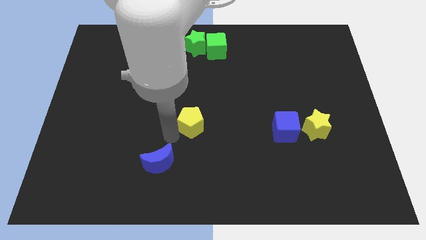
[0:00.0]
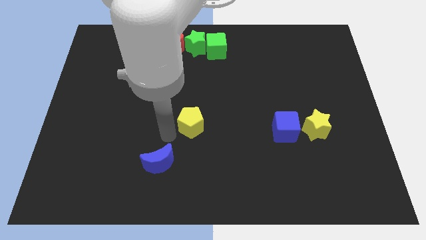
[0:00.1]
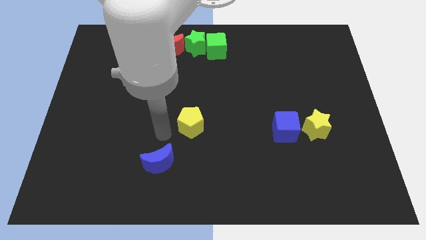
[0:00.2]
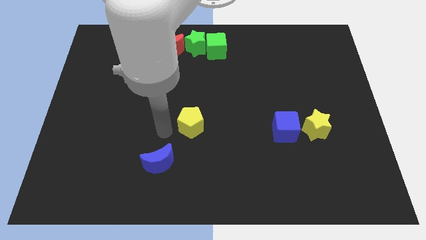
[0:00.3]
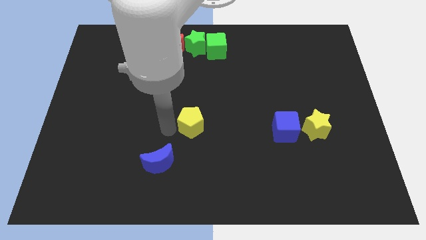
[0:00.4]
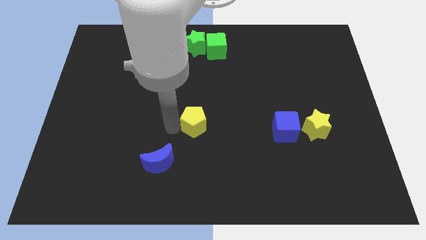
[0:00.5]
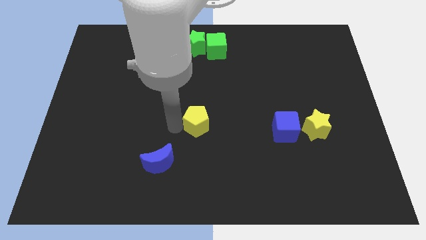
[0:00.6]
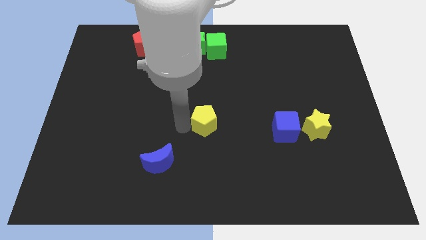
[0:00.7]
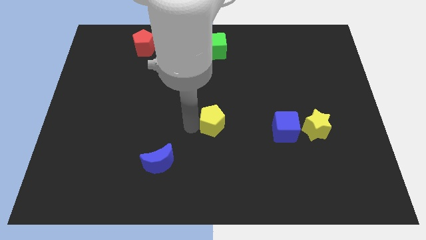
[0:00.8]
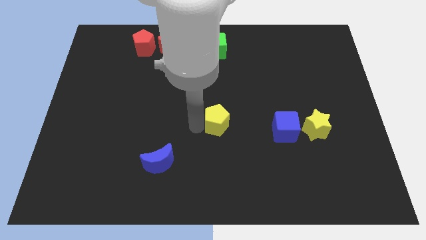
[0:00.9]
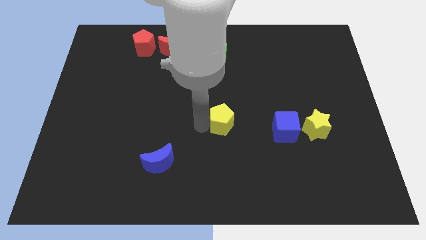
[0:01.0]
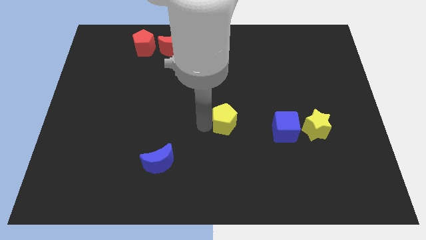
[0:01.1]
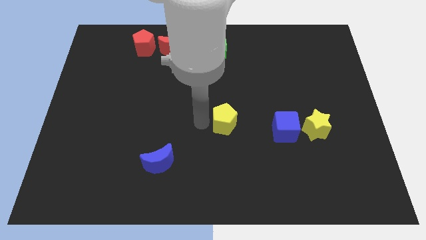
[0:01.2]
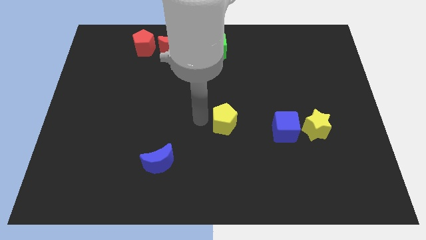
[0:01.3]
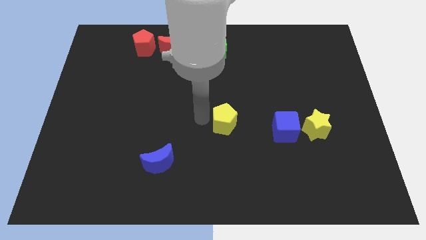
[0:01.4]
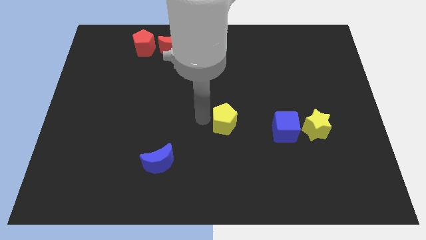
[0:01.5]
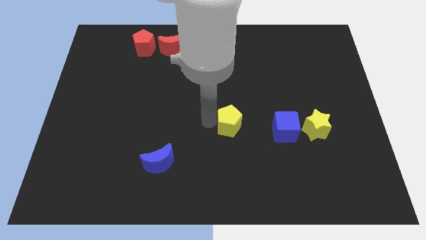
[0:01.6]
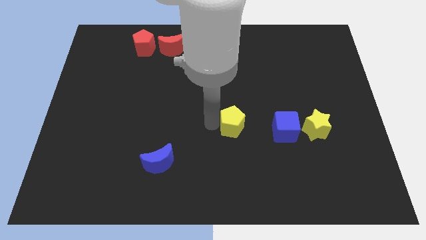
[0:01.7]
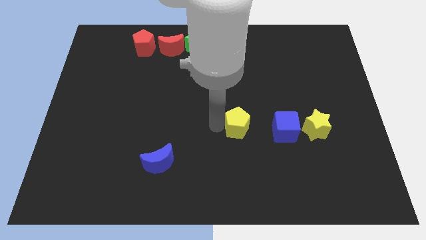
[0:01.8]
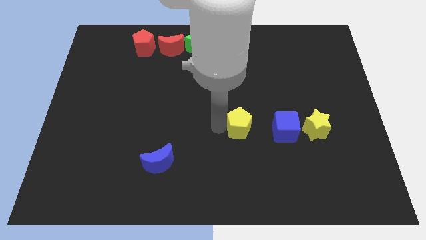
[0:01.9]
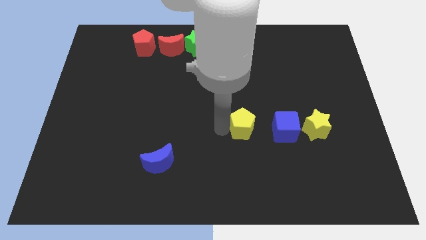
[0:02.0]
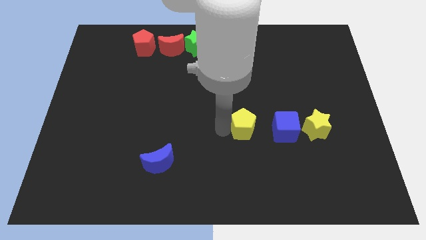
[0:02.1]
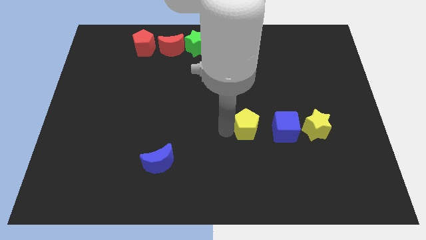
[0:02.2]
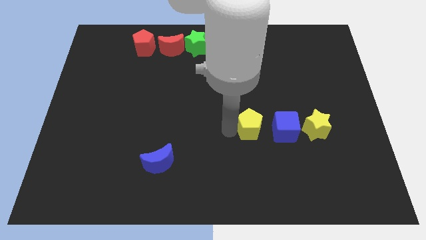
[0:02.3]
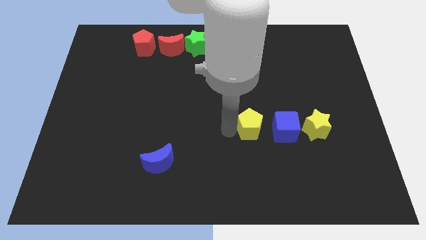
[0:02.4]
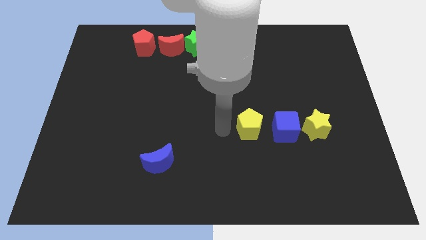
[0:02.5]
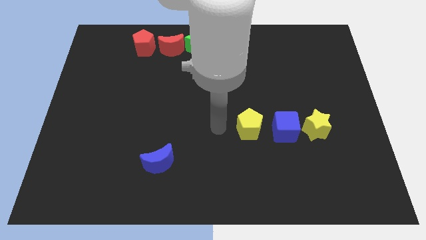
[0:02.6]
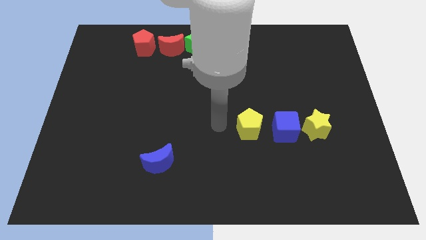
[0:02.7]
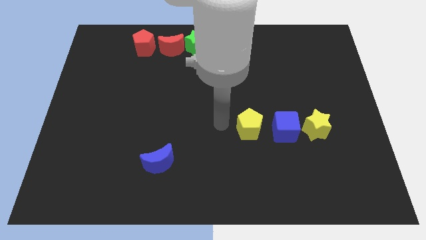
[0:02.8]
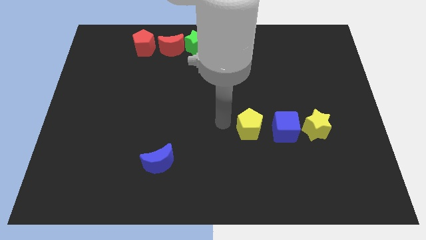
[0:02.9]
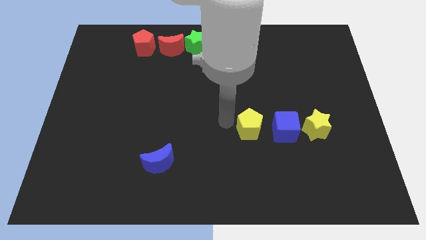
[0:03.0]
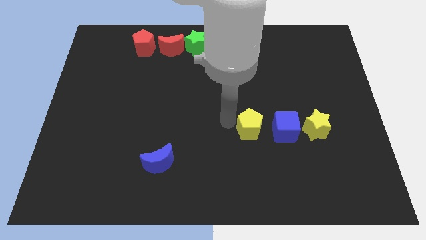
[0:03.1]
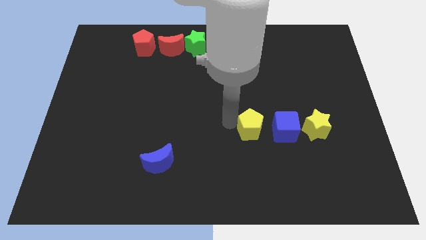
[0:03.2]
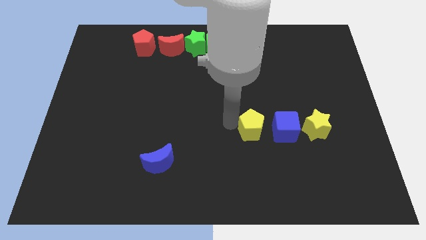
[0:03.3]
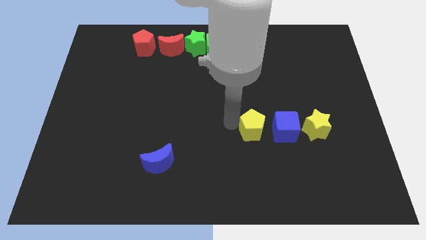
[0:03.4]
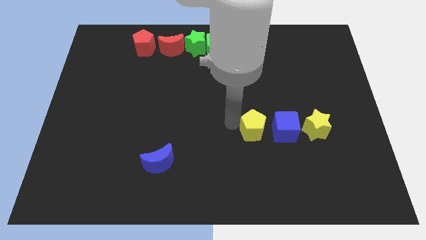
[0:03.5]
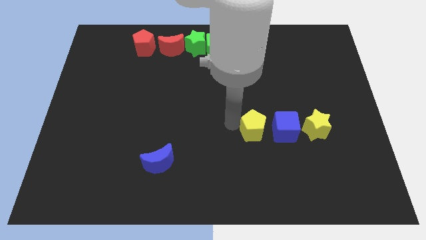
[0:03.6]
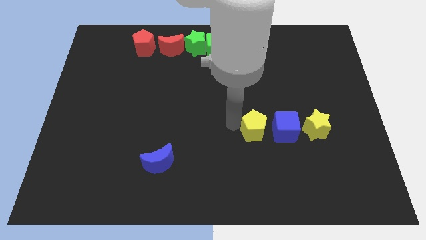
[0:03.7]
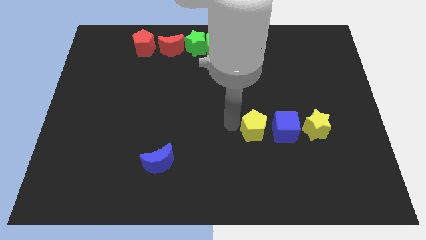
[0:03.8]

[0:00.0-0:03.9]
place the yellow pentagon at left side of the blue cube

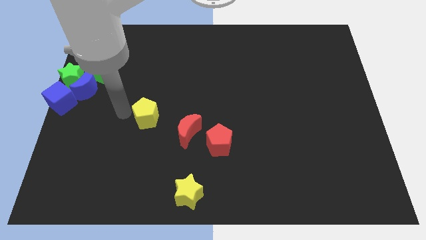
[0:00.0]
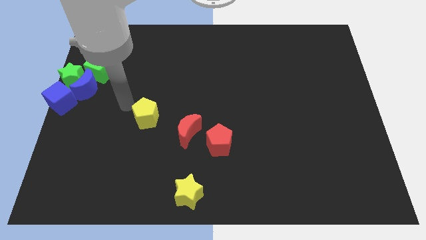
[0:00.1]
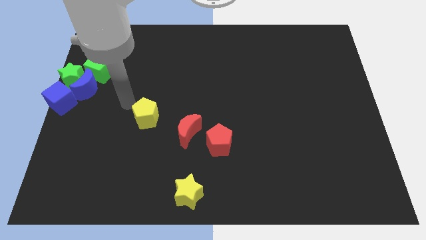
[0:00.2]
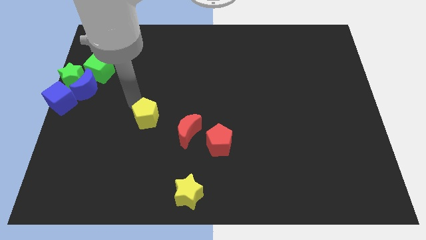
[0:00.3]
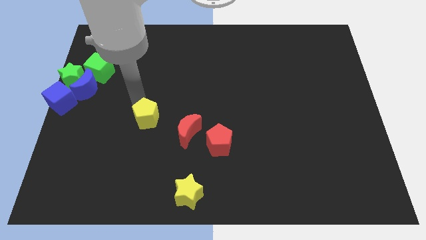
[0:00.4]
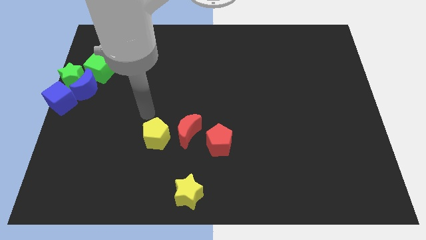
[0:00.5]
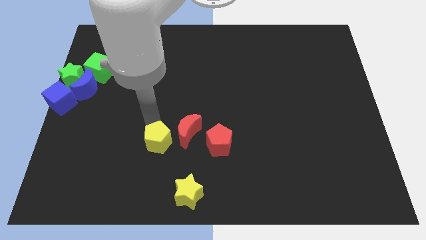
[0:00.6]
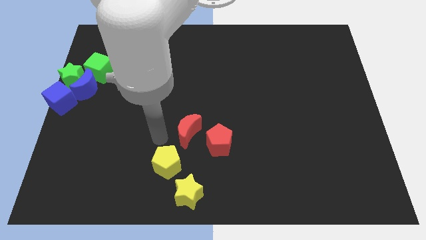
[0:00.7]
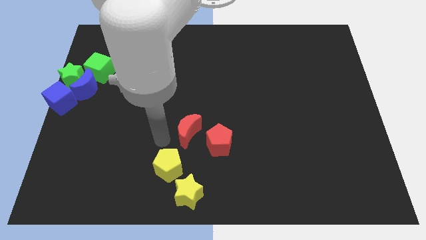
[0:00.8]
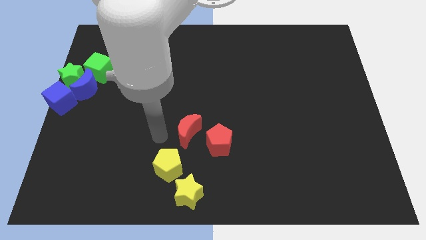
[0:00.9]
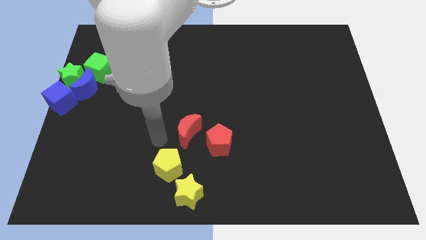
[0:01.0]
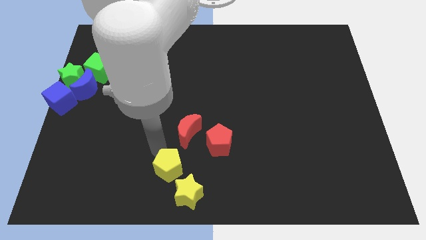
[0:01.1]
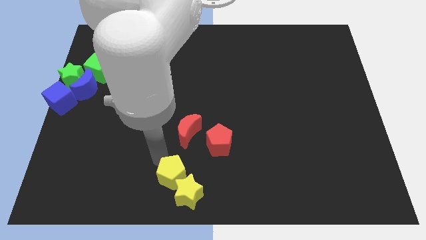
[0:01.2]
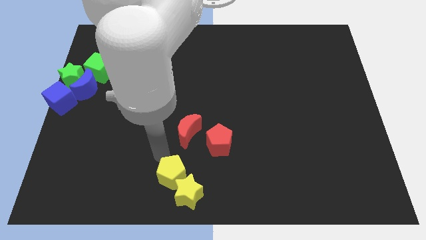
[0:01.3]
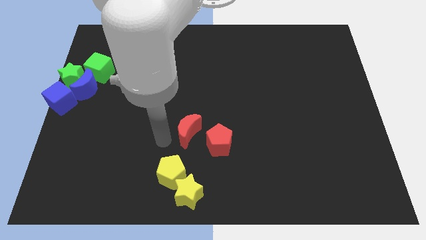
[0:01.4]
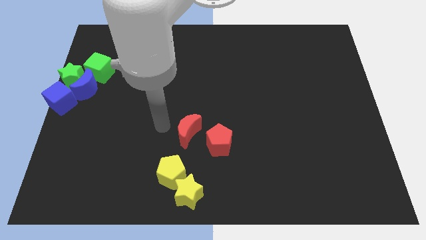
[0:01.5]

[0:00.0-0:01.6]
push the yellow pentagon close to the yellow star

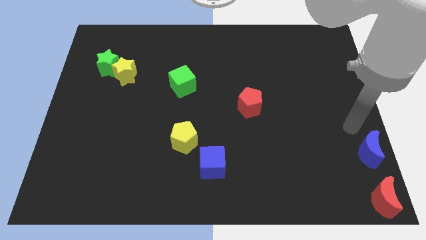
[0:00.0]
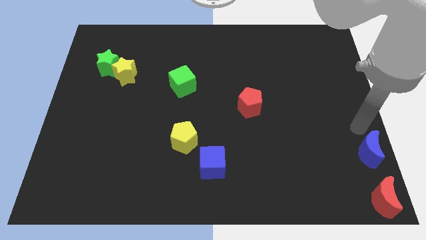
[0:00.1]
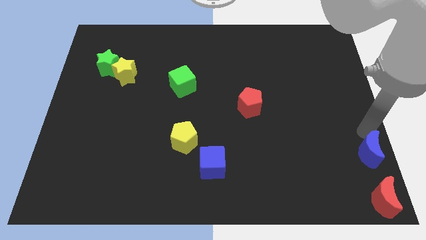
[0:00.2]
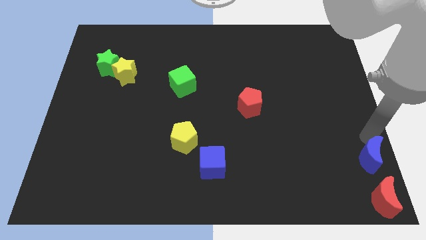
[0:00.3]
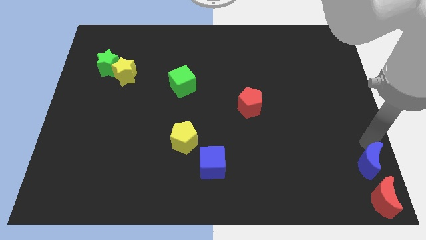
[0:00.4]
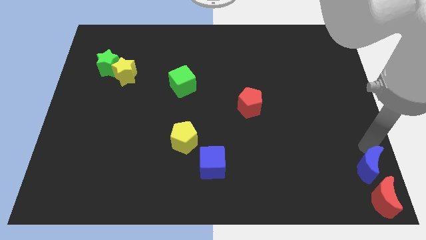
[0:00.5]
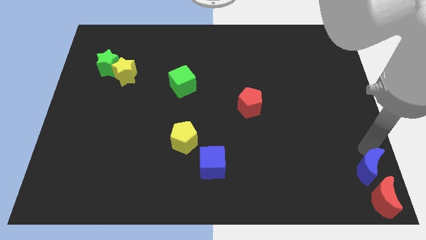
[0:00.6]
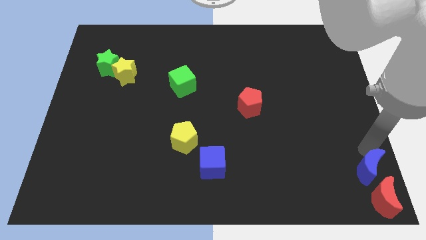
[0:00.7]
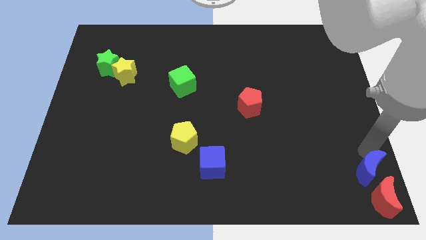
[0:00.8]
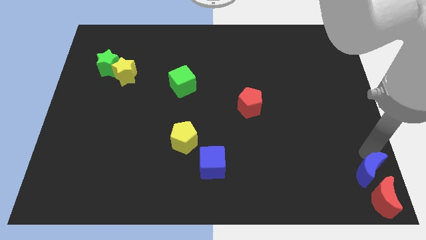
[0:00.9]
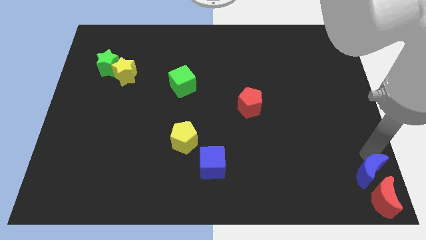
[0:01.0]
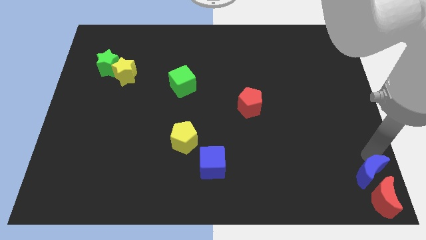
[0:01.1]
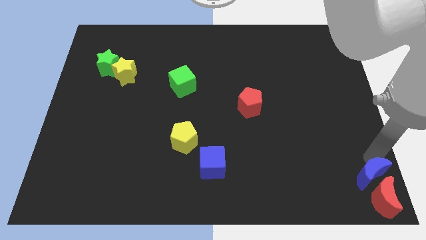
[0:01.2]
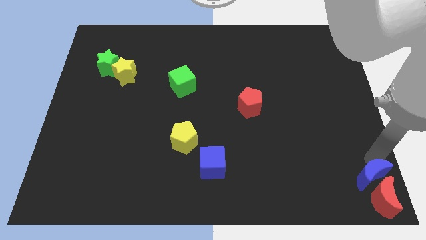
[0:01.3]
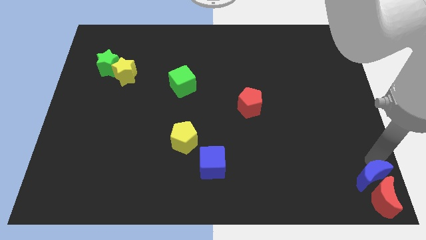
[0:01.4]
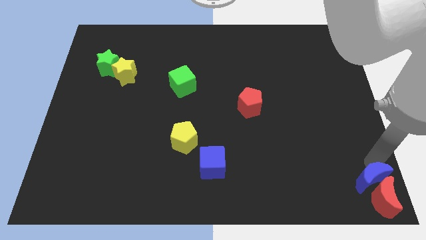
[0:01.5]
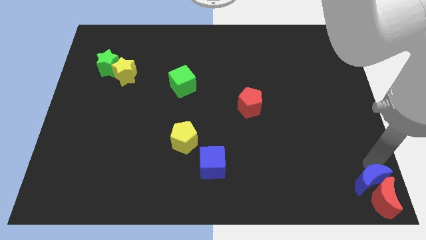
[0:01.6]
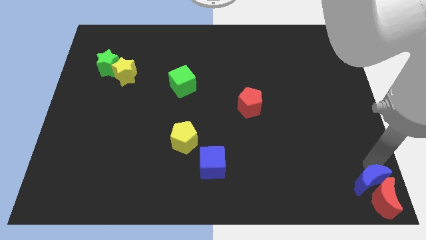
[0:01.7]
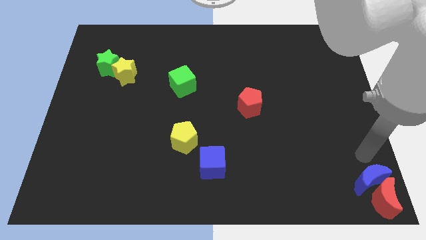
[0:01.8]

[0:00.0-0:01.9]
push the blue crescent into the red crescent

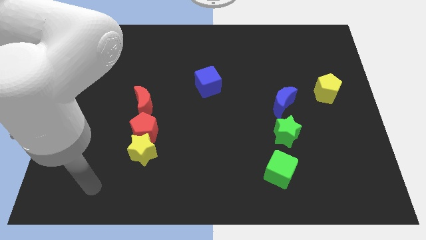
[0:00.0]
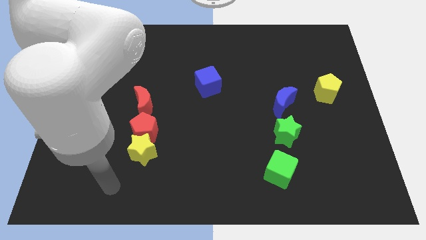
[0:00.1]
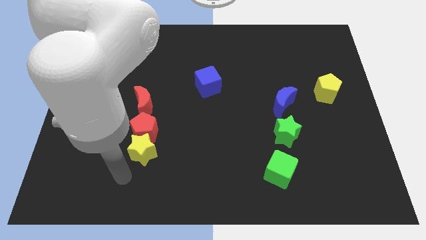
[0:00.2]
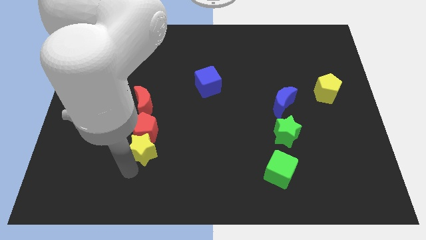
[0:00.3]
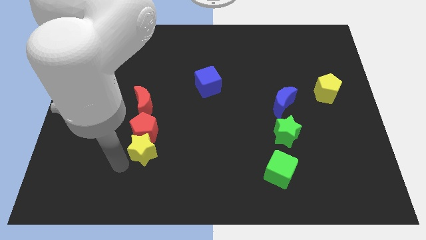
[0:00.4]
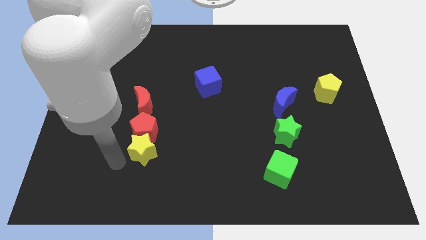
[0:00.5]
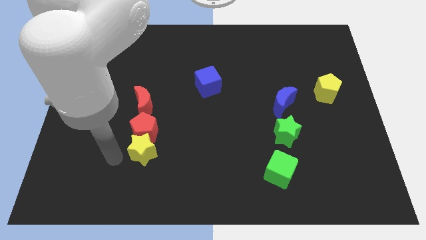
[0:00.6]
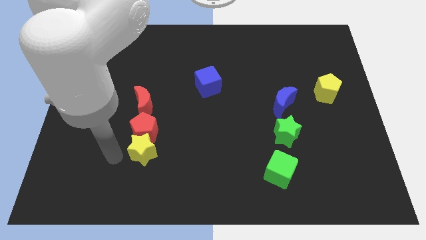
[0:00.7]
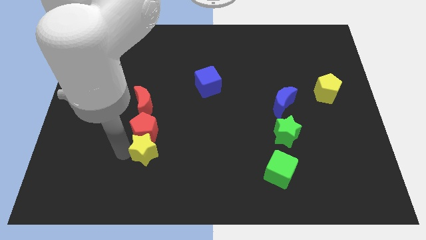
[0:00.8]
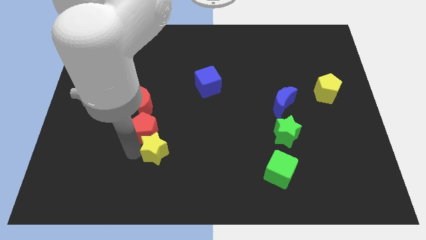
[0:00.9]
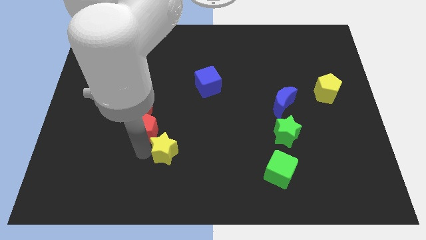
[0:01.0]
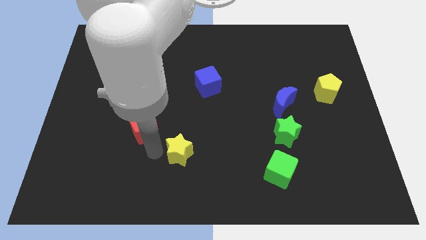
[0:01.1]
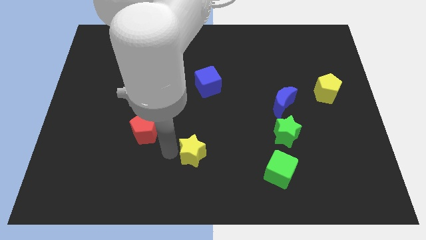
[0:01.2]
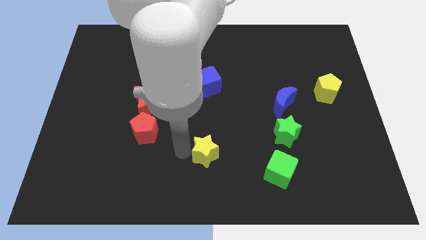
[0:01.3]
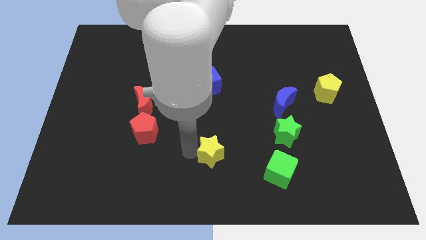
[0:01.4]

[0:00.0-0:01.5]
separate the yellow star from the red pentagon

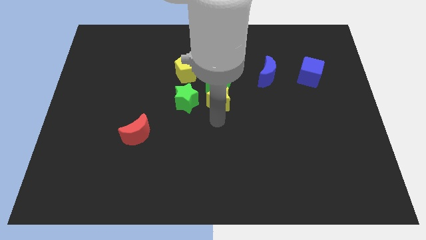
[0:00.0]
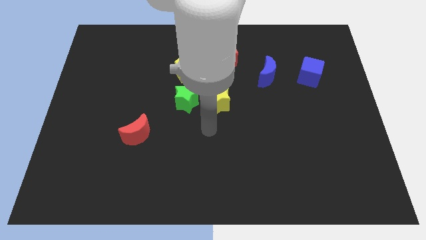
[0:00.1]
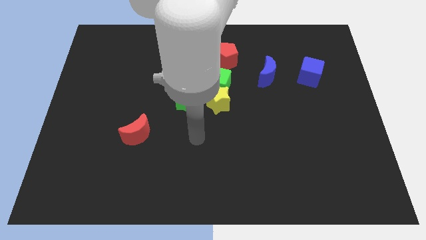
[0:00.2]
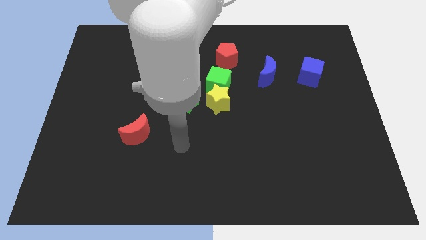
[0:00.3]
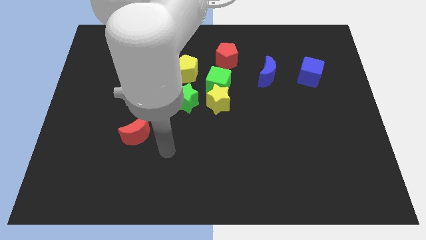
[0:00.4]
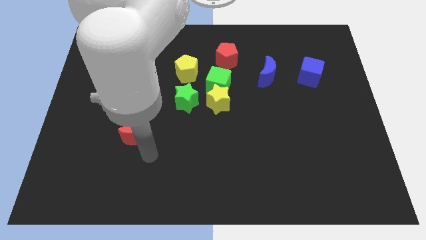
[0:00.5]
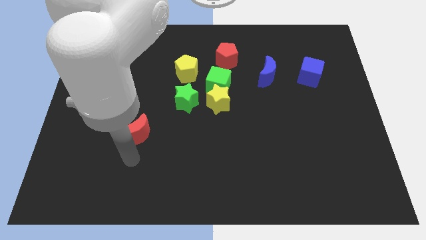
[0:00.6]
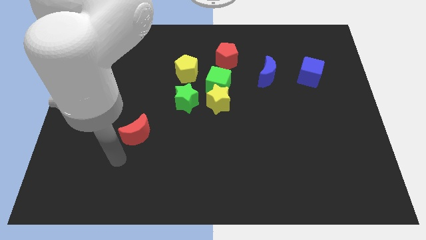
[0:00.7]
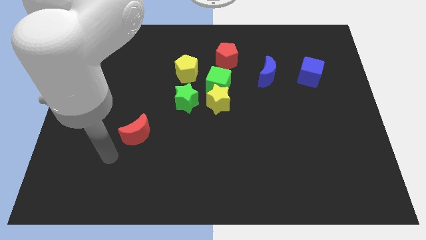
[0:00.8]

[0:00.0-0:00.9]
move your arm to the bottom of the yellow star
